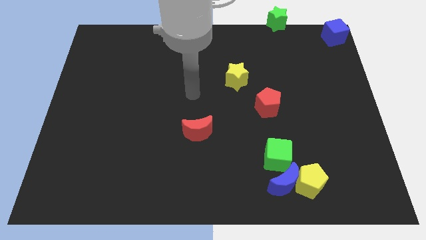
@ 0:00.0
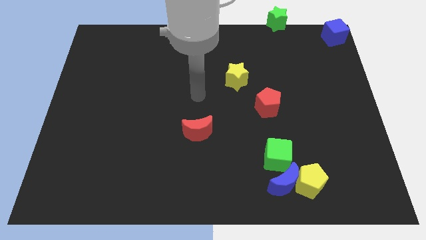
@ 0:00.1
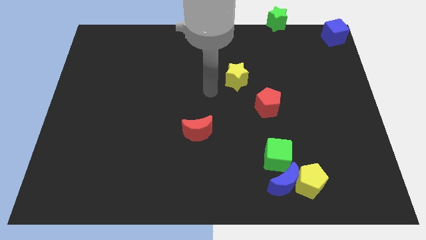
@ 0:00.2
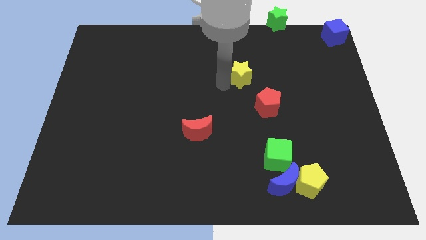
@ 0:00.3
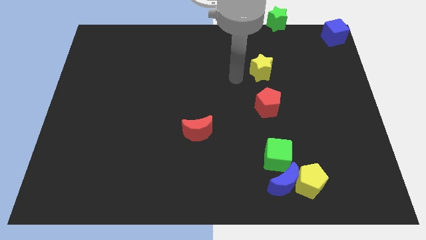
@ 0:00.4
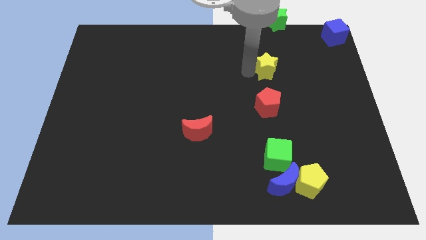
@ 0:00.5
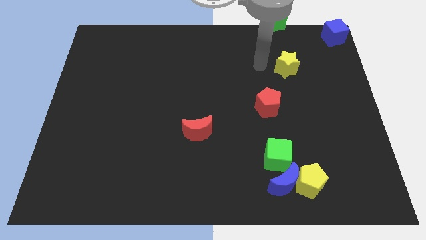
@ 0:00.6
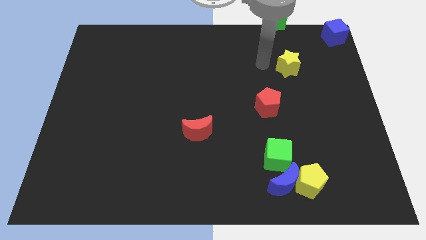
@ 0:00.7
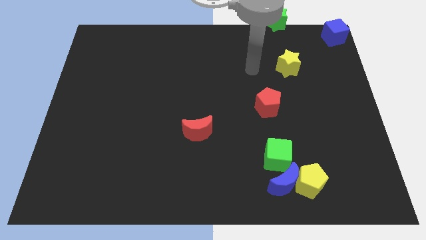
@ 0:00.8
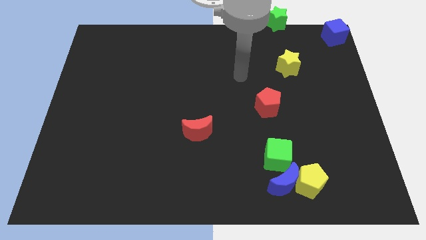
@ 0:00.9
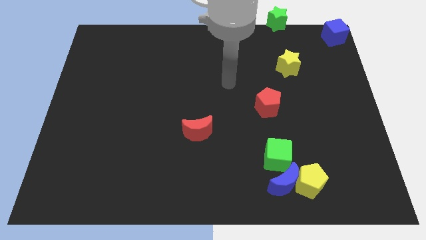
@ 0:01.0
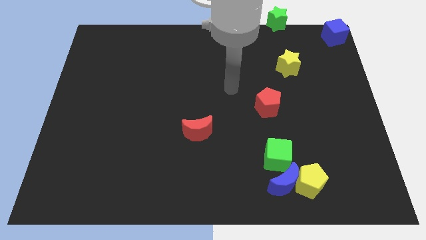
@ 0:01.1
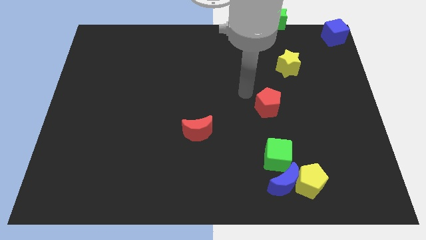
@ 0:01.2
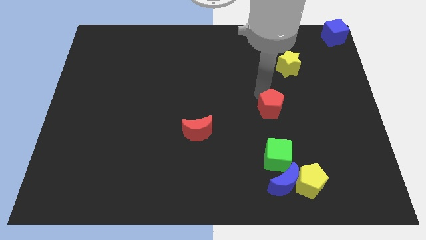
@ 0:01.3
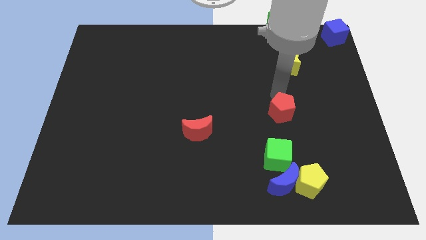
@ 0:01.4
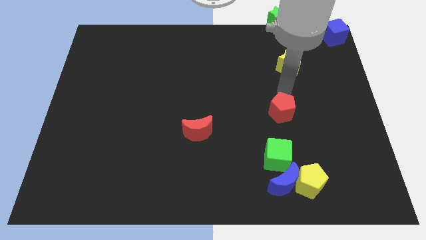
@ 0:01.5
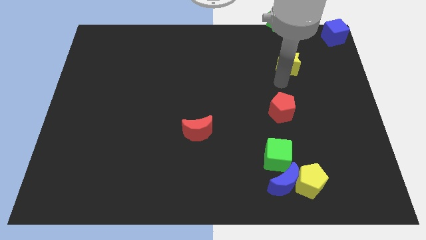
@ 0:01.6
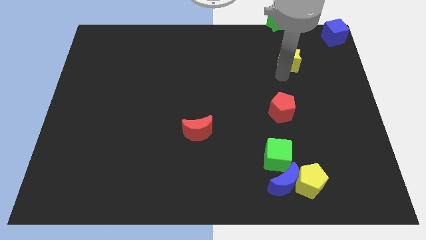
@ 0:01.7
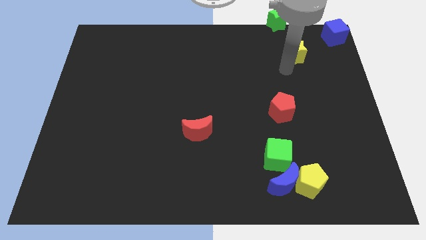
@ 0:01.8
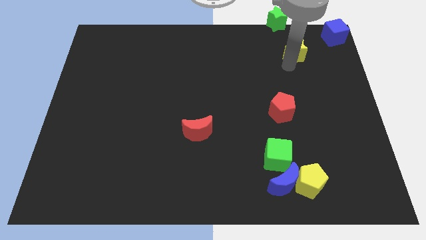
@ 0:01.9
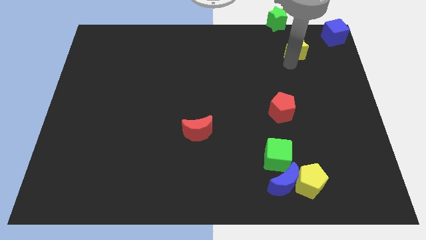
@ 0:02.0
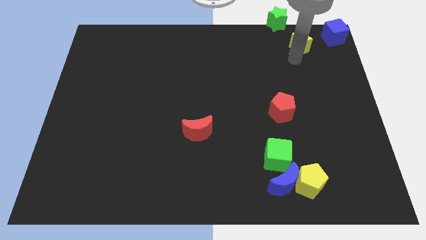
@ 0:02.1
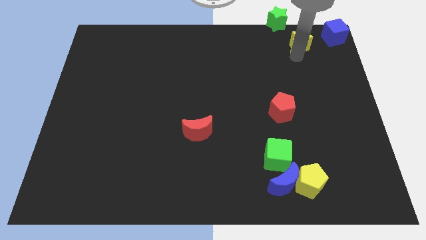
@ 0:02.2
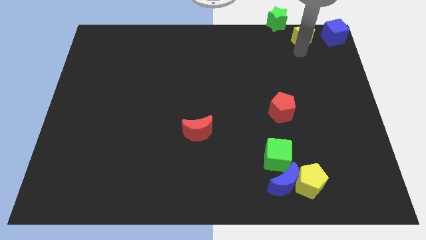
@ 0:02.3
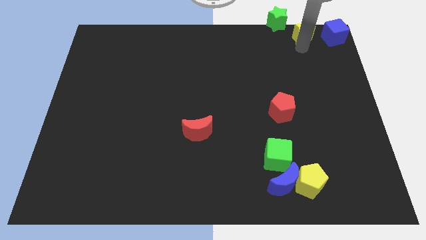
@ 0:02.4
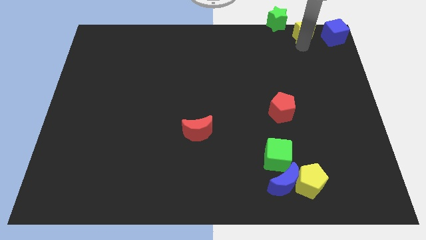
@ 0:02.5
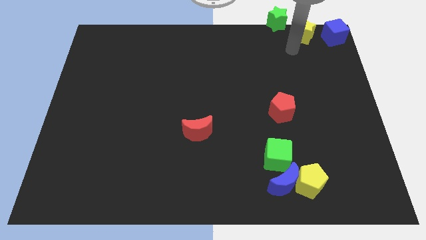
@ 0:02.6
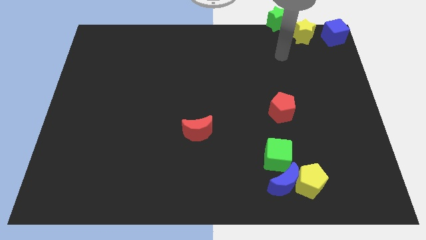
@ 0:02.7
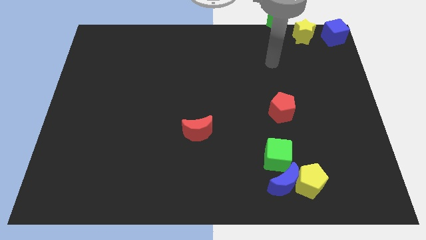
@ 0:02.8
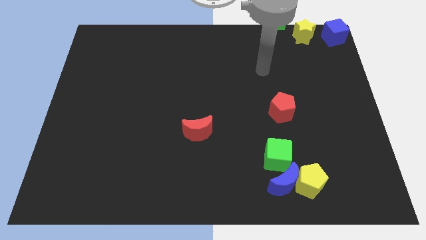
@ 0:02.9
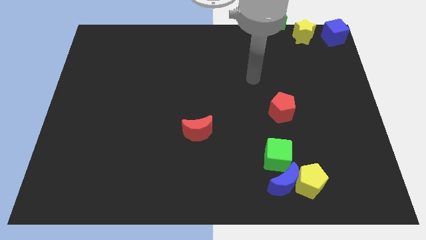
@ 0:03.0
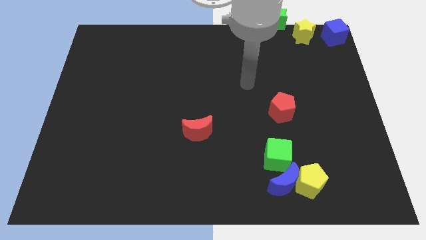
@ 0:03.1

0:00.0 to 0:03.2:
place the yellow star in between blue cube and the green star

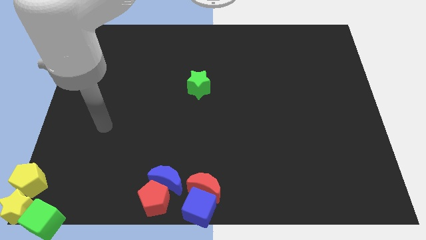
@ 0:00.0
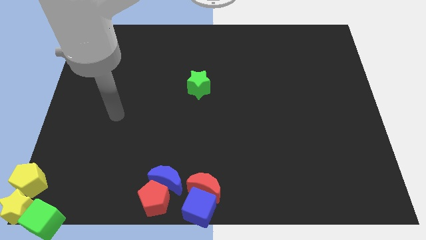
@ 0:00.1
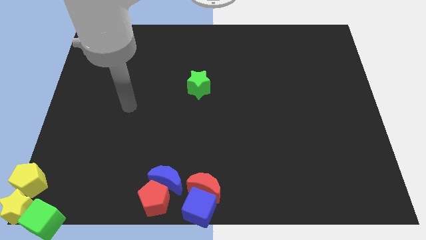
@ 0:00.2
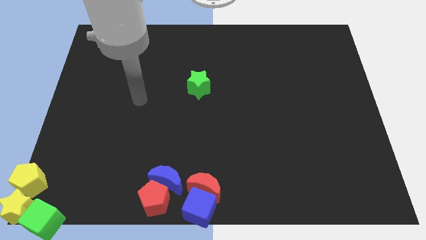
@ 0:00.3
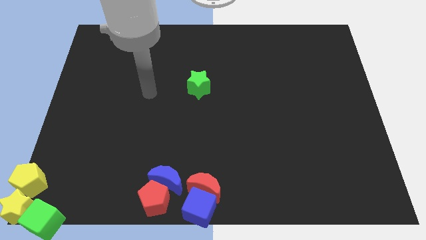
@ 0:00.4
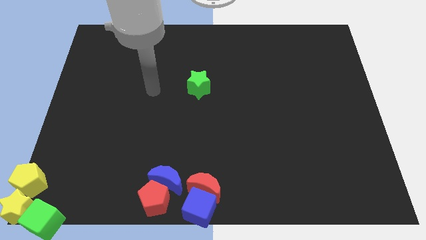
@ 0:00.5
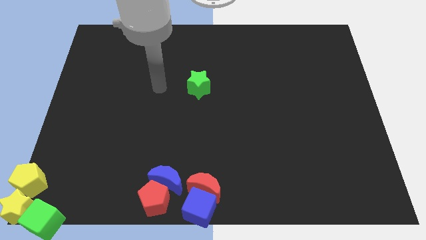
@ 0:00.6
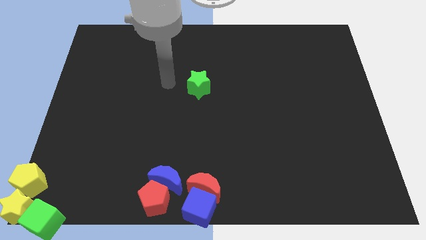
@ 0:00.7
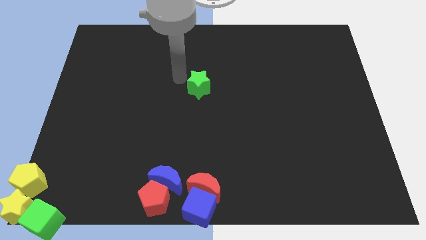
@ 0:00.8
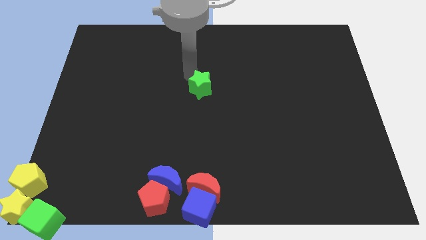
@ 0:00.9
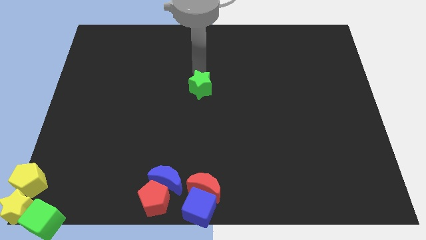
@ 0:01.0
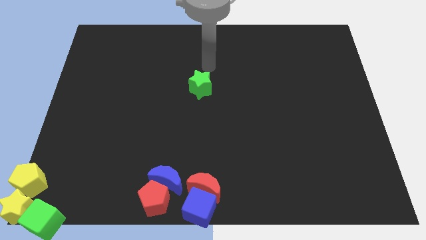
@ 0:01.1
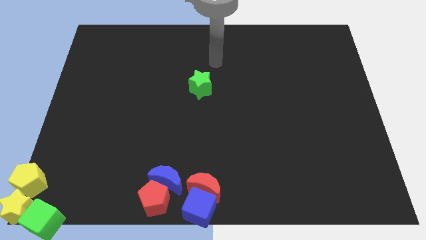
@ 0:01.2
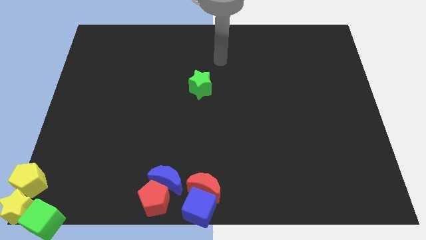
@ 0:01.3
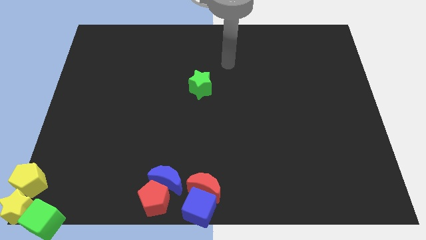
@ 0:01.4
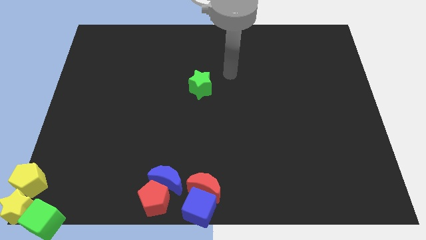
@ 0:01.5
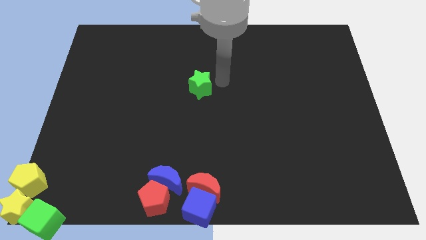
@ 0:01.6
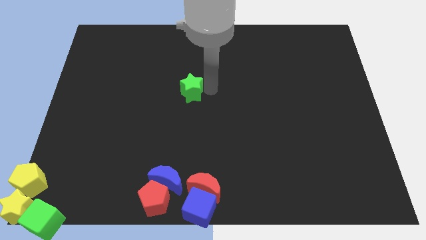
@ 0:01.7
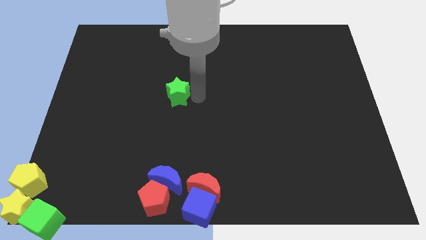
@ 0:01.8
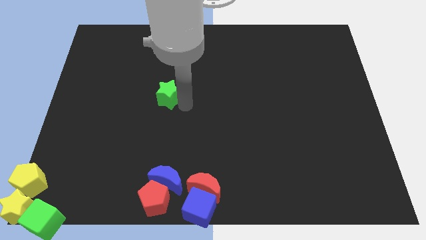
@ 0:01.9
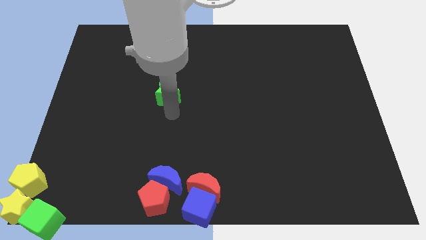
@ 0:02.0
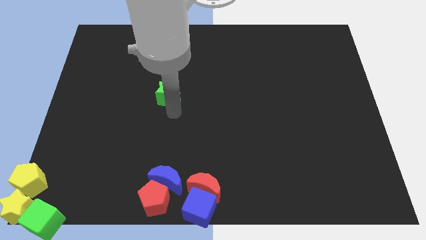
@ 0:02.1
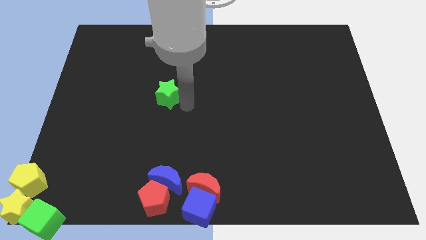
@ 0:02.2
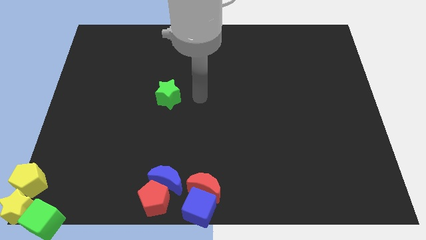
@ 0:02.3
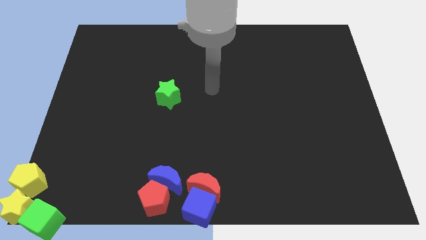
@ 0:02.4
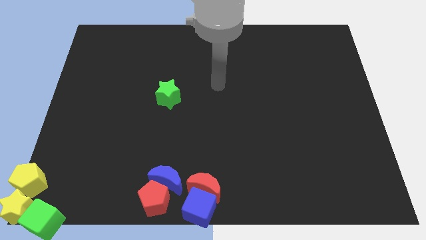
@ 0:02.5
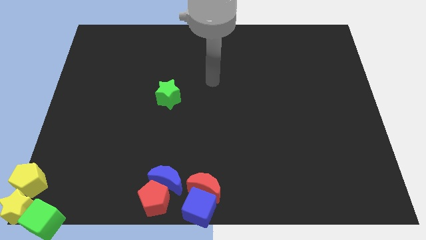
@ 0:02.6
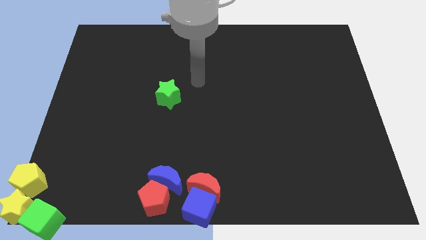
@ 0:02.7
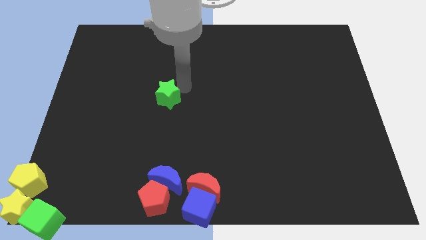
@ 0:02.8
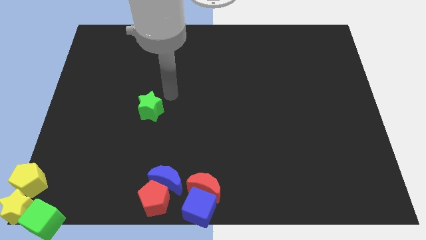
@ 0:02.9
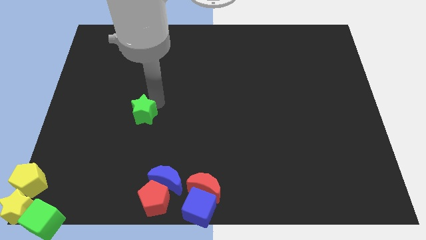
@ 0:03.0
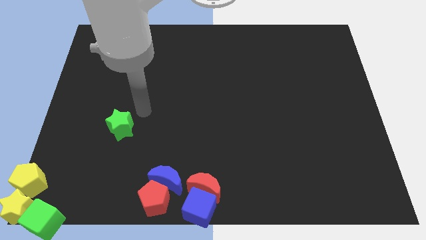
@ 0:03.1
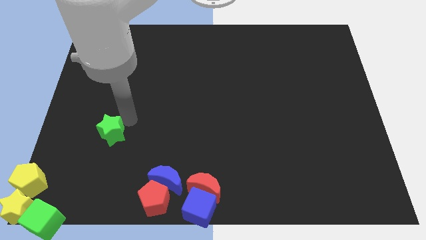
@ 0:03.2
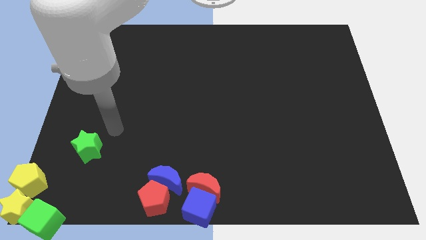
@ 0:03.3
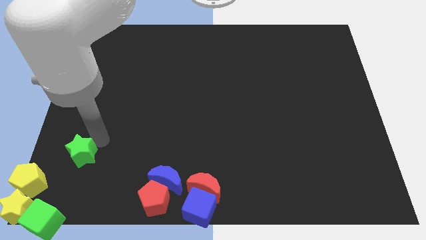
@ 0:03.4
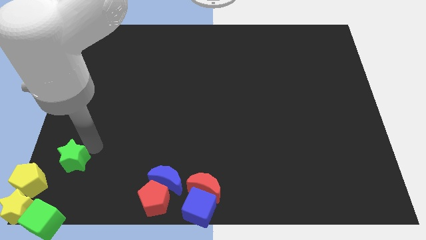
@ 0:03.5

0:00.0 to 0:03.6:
move the green star diagonally above the yellow pentagon

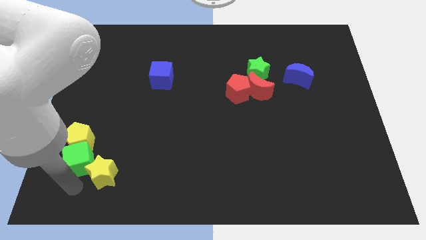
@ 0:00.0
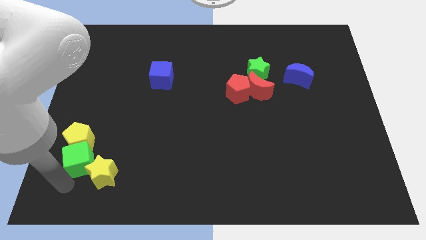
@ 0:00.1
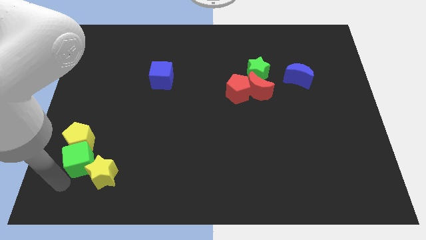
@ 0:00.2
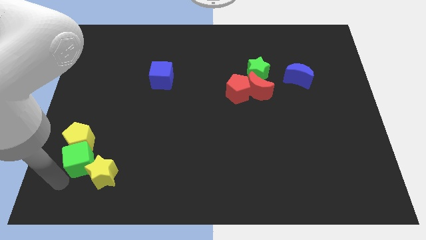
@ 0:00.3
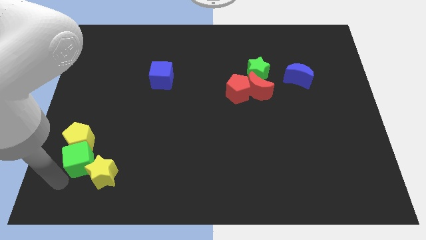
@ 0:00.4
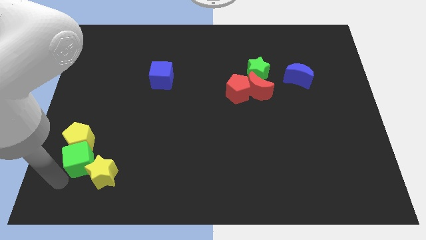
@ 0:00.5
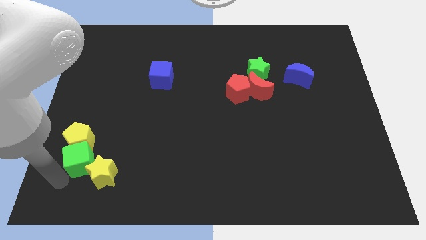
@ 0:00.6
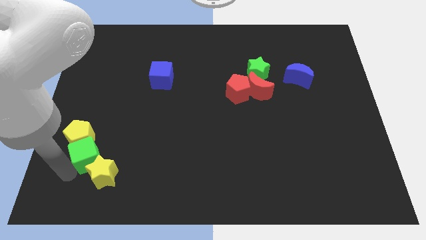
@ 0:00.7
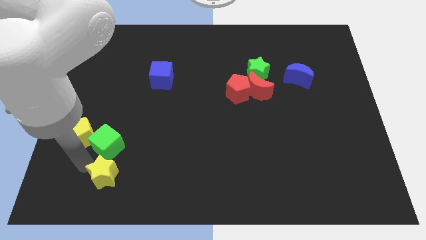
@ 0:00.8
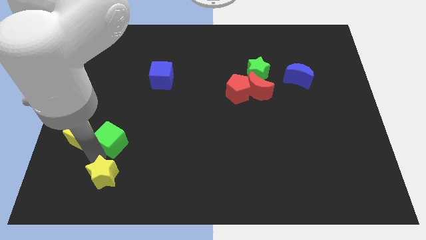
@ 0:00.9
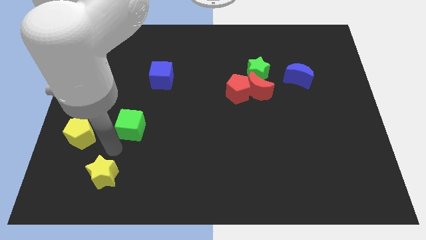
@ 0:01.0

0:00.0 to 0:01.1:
separate green cube from yellow blocks

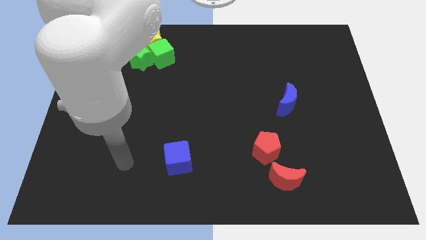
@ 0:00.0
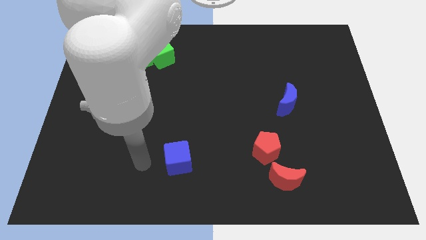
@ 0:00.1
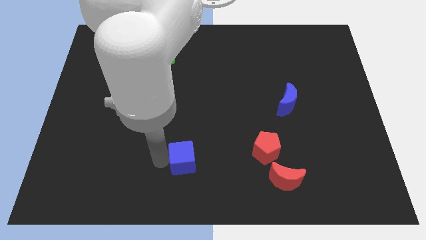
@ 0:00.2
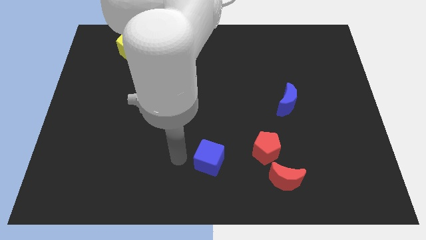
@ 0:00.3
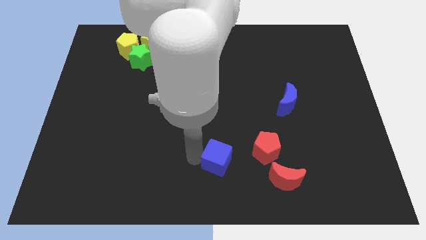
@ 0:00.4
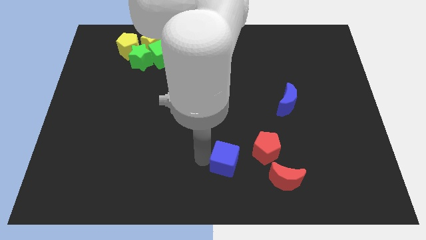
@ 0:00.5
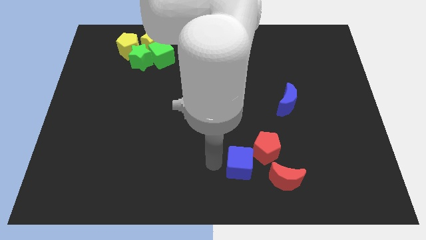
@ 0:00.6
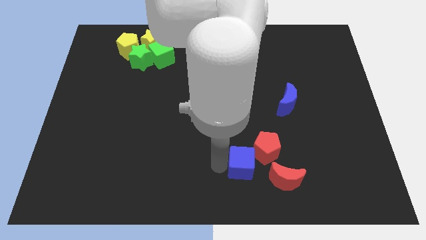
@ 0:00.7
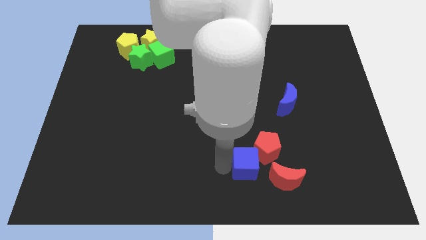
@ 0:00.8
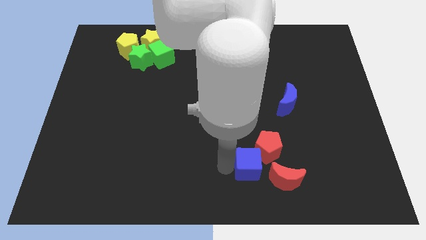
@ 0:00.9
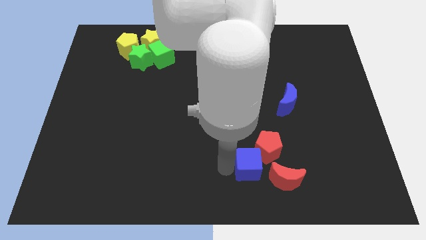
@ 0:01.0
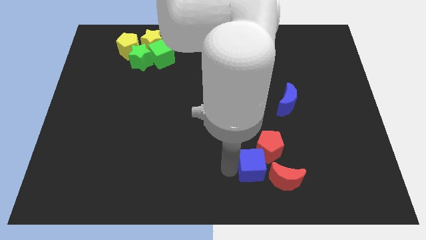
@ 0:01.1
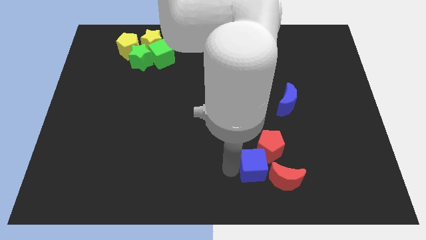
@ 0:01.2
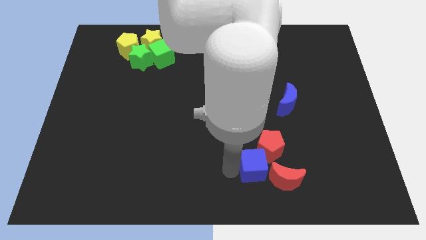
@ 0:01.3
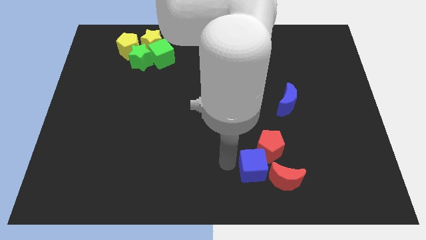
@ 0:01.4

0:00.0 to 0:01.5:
move the blue cube to bottom left side of the red pentagon
